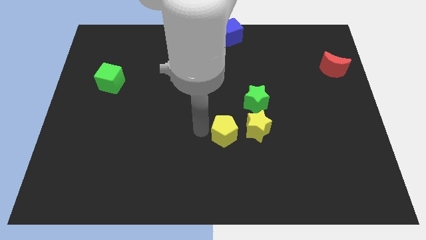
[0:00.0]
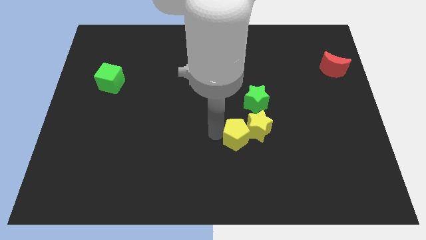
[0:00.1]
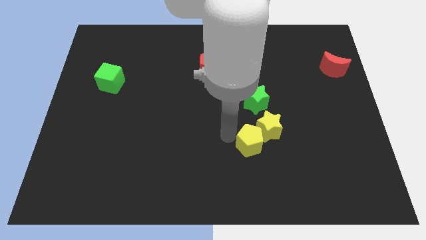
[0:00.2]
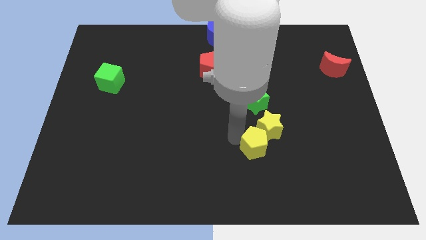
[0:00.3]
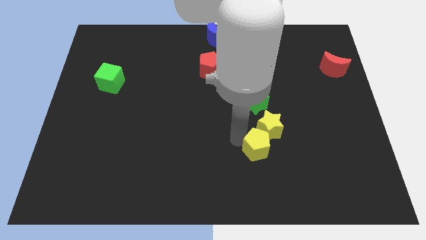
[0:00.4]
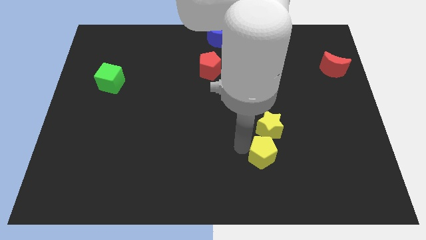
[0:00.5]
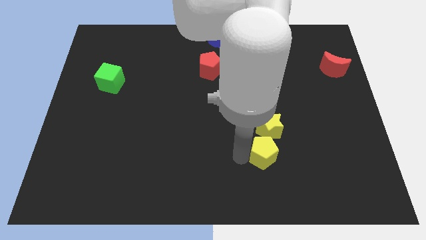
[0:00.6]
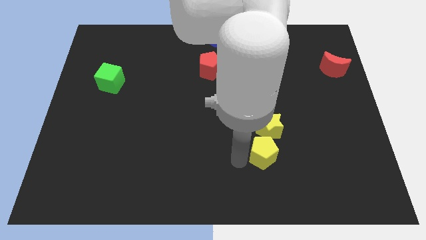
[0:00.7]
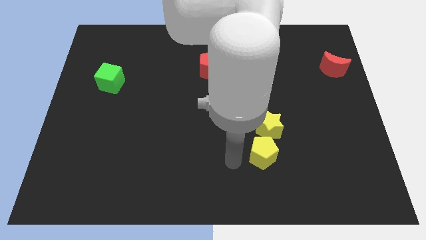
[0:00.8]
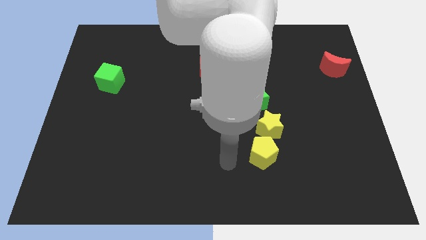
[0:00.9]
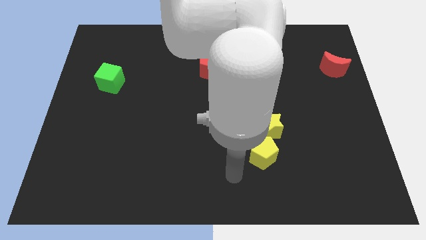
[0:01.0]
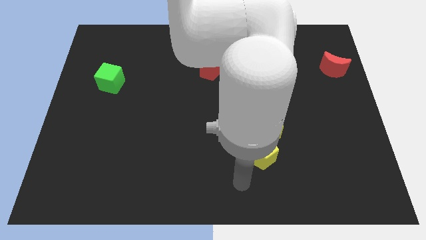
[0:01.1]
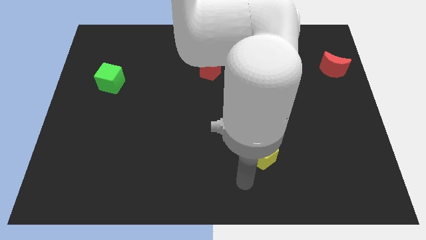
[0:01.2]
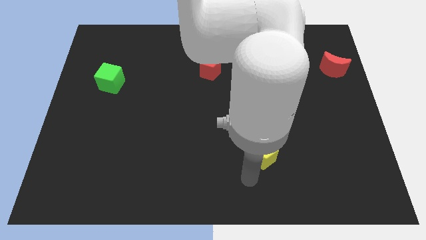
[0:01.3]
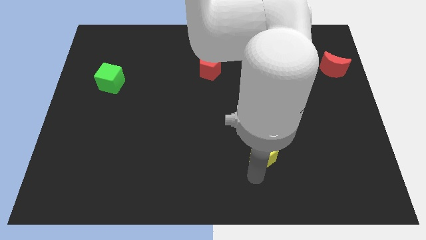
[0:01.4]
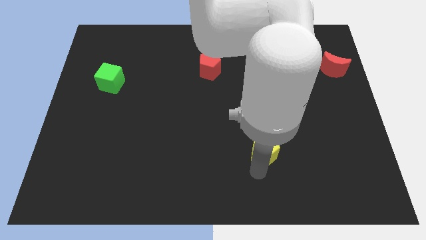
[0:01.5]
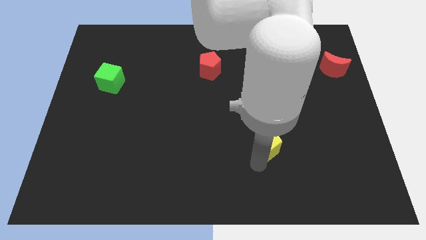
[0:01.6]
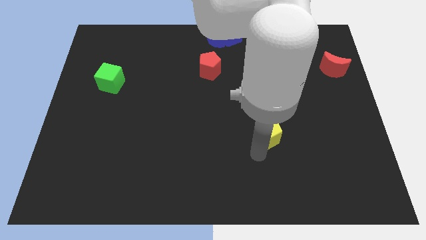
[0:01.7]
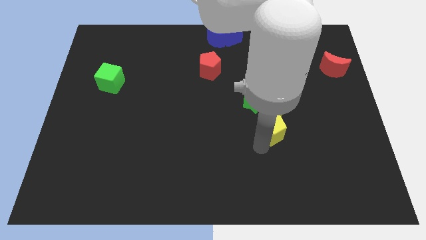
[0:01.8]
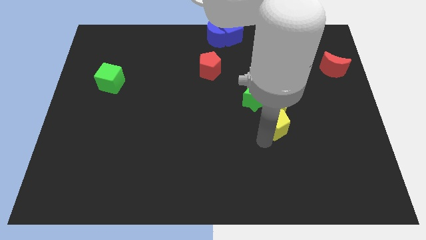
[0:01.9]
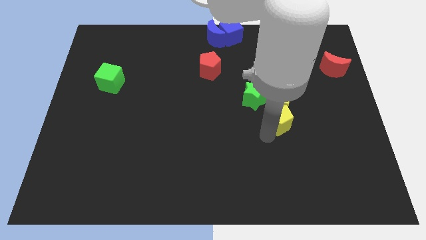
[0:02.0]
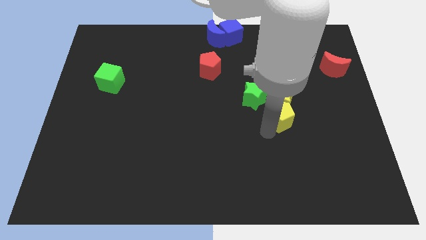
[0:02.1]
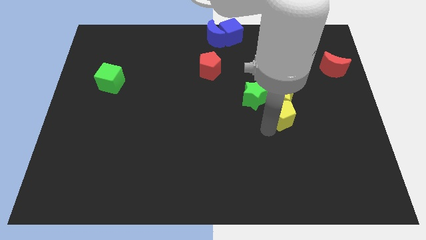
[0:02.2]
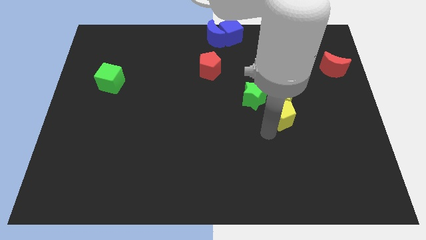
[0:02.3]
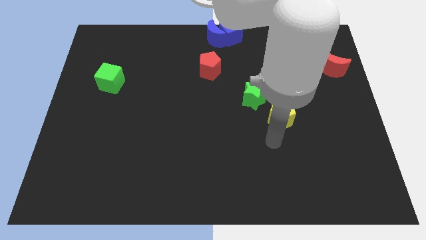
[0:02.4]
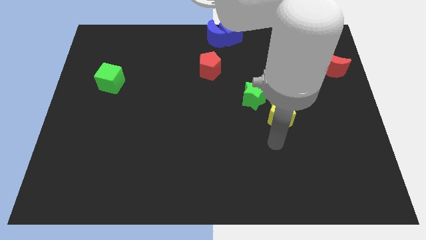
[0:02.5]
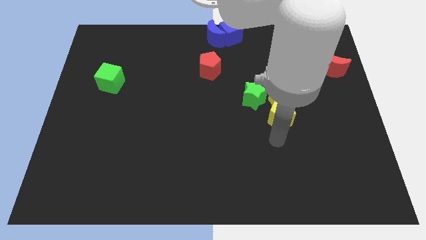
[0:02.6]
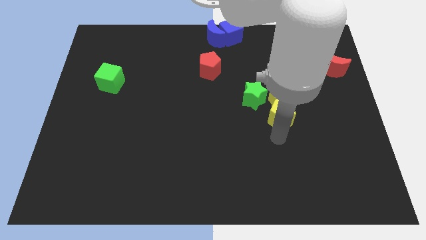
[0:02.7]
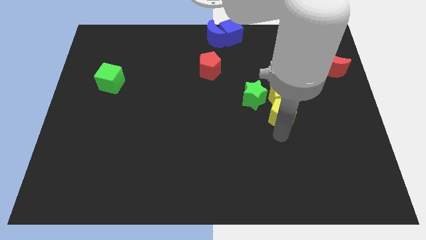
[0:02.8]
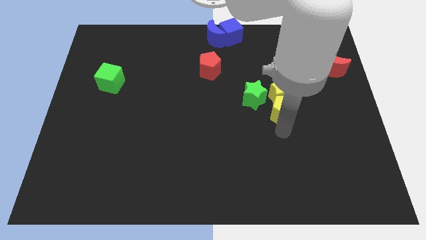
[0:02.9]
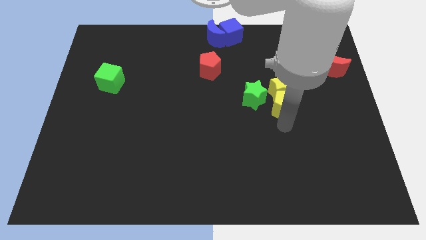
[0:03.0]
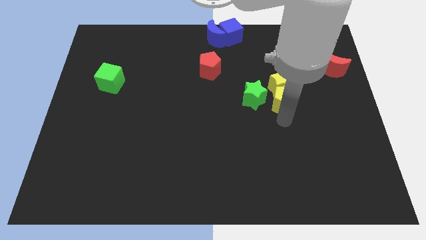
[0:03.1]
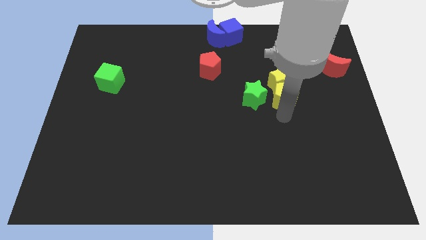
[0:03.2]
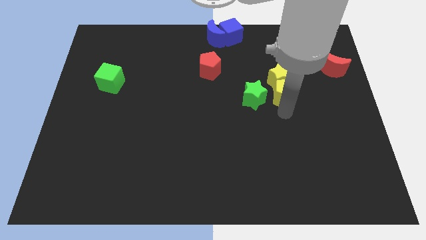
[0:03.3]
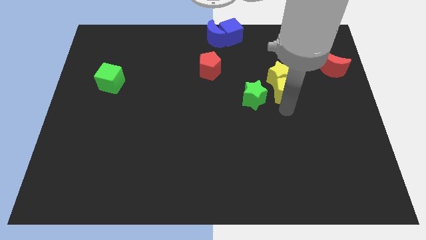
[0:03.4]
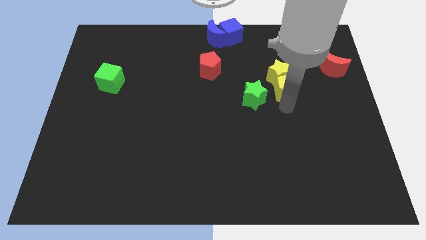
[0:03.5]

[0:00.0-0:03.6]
move the yellow blocks to the right side of the green star

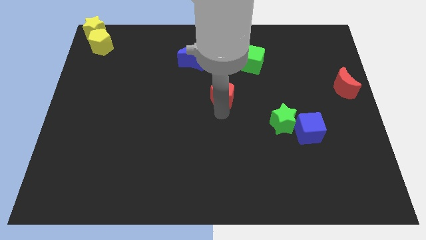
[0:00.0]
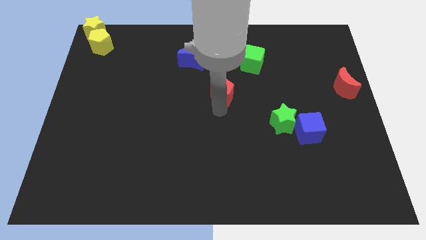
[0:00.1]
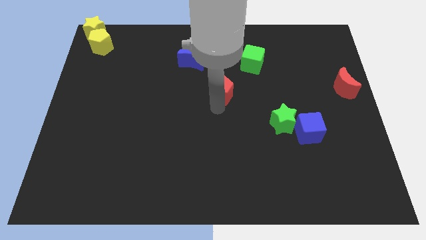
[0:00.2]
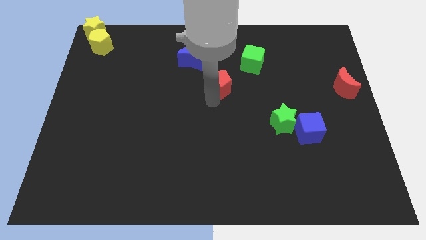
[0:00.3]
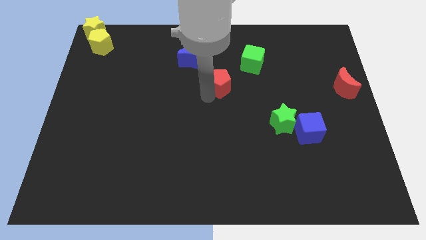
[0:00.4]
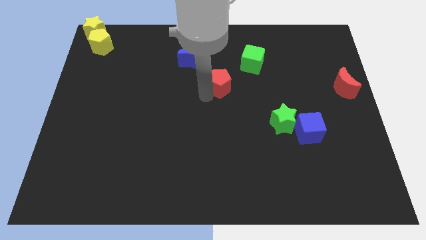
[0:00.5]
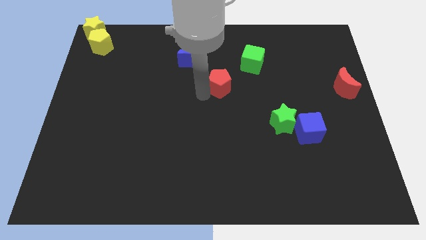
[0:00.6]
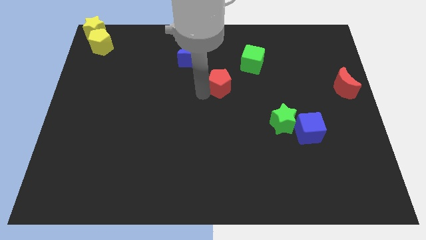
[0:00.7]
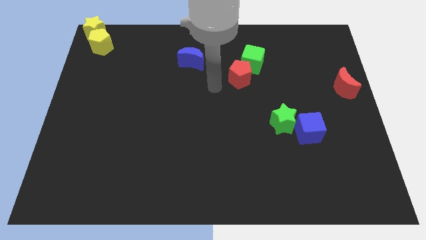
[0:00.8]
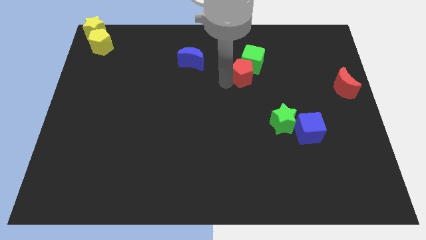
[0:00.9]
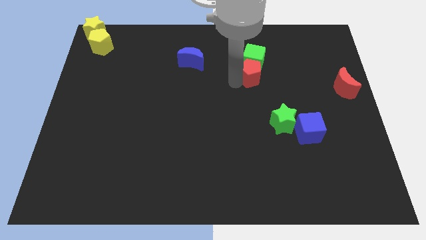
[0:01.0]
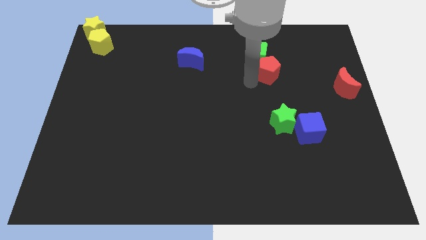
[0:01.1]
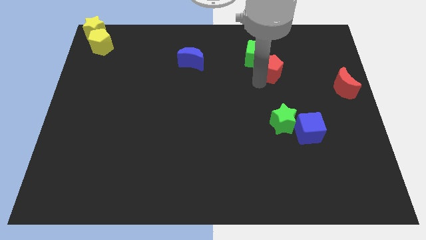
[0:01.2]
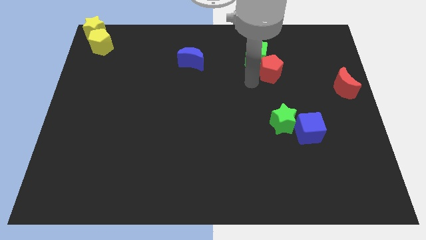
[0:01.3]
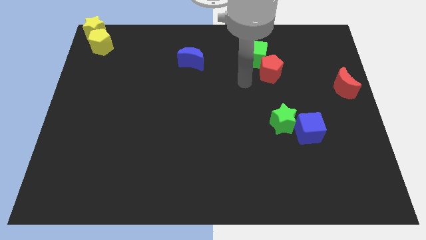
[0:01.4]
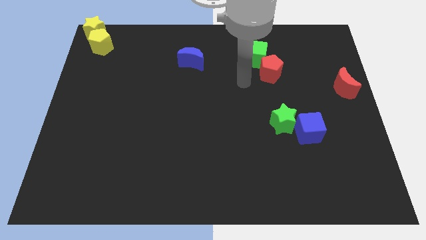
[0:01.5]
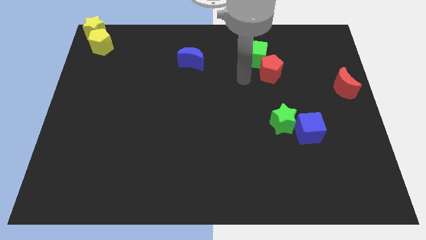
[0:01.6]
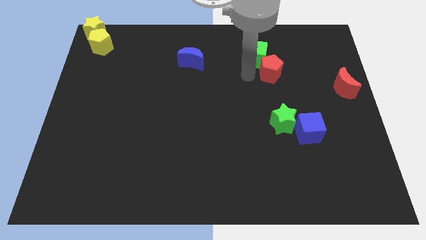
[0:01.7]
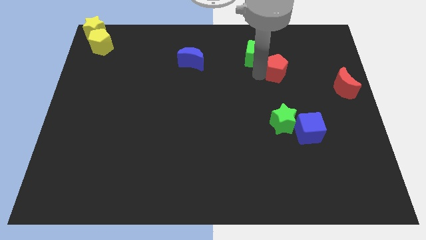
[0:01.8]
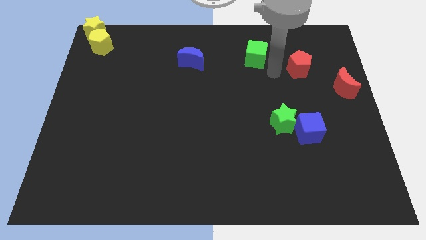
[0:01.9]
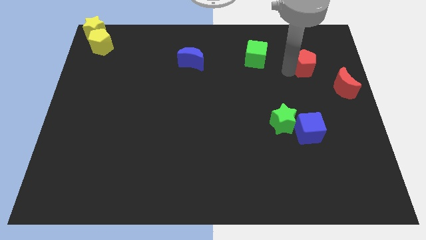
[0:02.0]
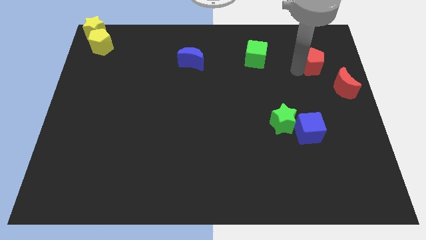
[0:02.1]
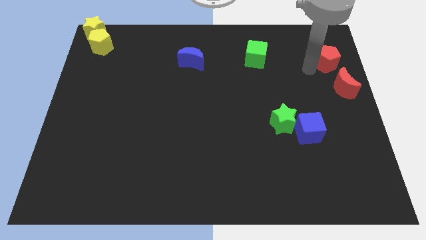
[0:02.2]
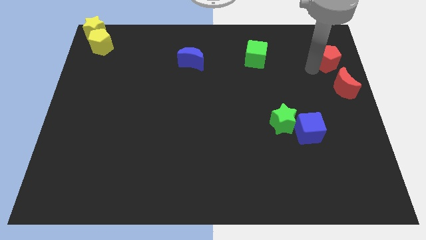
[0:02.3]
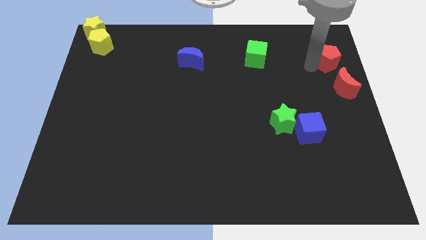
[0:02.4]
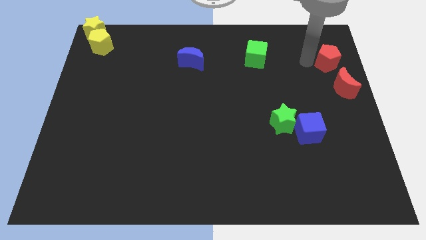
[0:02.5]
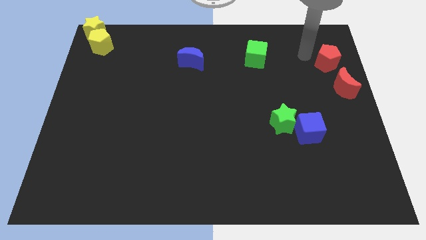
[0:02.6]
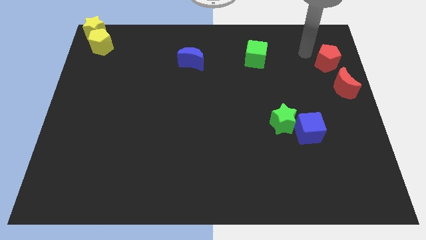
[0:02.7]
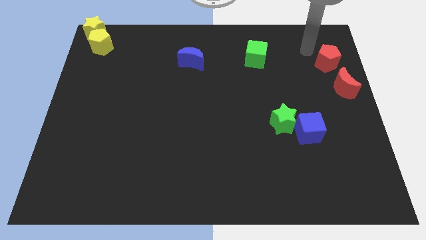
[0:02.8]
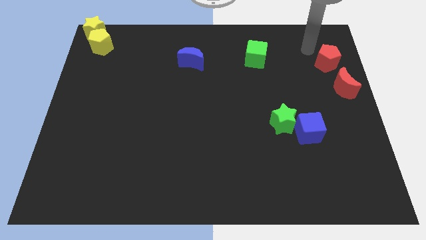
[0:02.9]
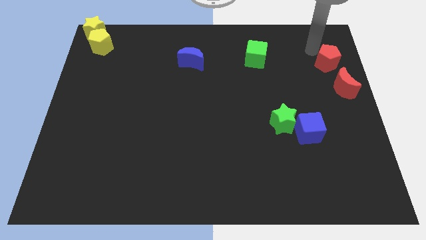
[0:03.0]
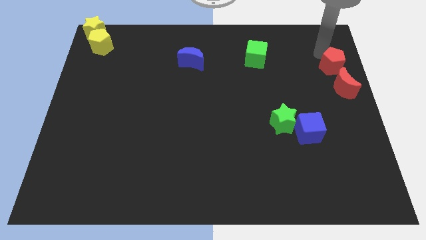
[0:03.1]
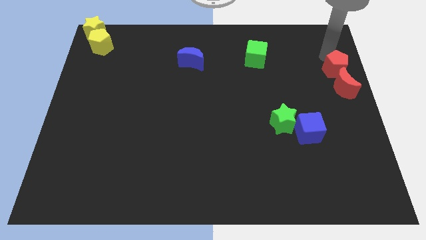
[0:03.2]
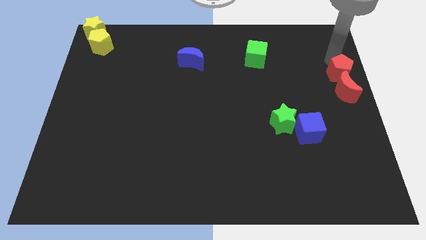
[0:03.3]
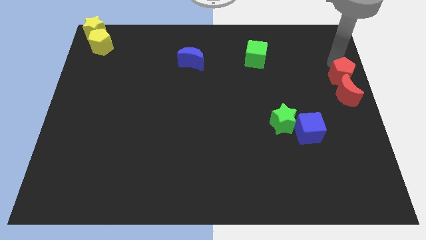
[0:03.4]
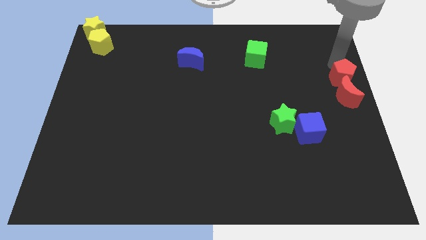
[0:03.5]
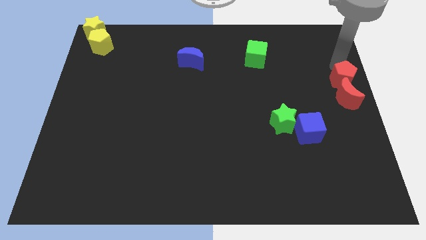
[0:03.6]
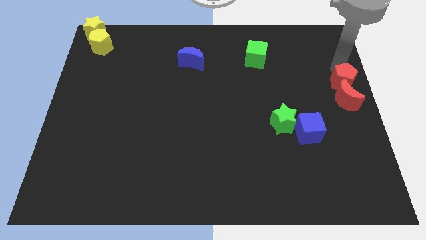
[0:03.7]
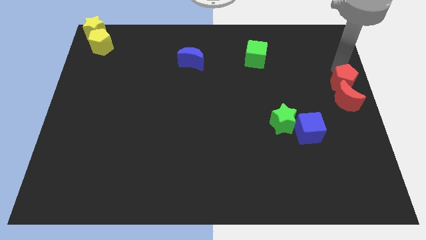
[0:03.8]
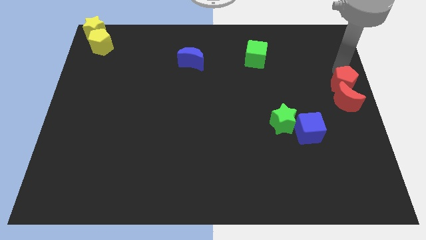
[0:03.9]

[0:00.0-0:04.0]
push the red pentagon into the red moon

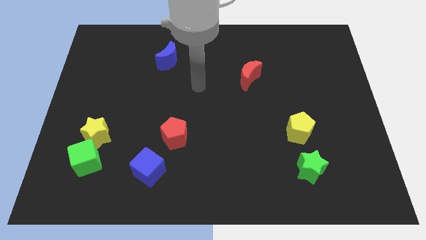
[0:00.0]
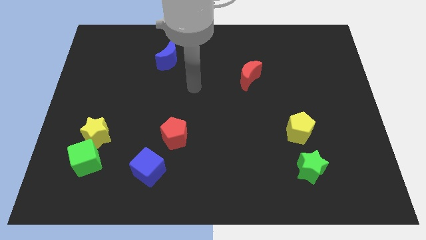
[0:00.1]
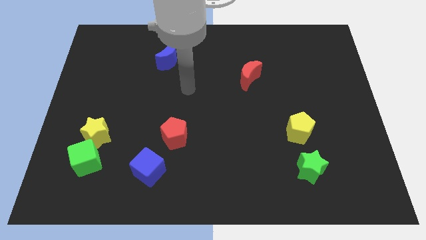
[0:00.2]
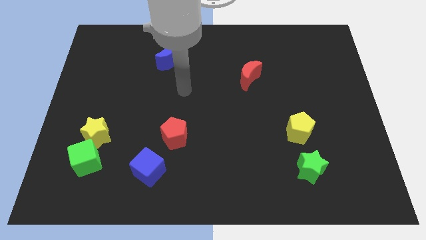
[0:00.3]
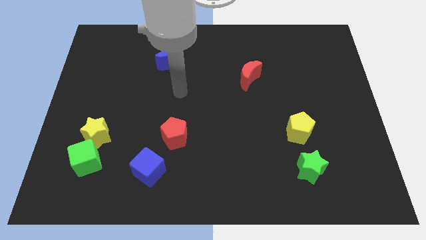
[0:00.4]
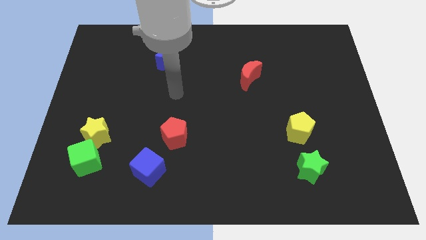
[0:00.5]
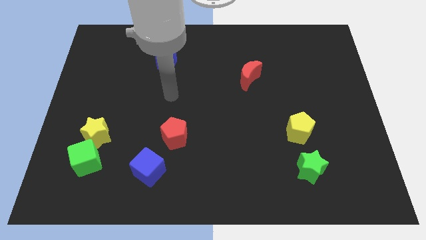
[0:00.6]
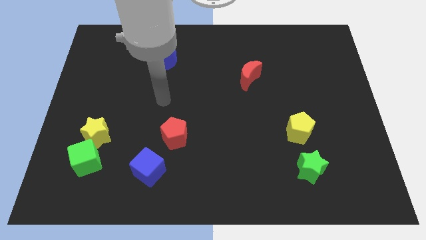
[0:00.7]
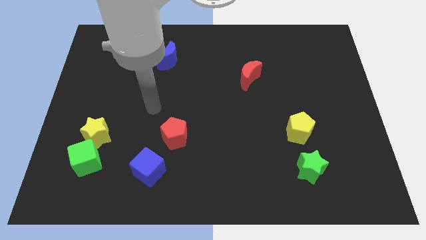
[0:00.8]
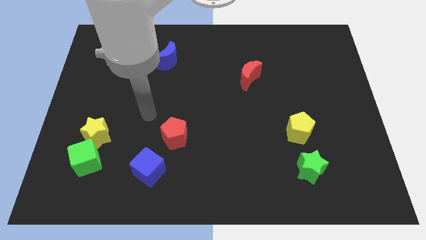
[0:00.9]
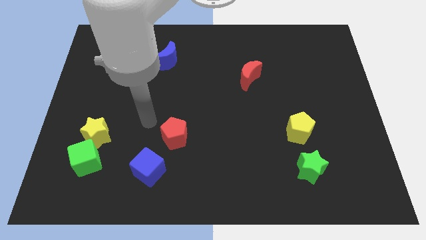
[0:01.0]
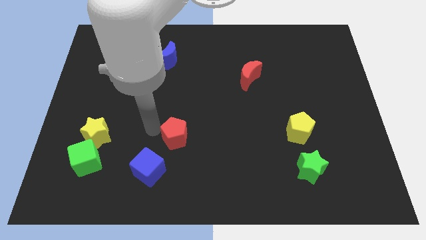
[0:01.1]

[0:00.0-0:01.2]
point your arm at the top left side of the red pentagon

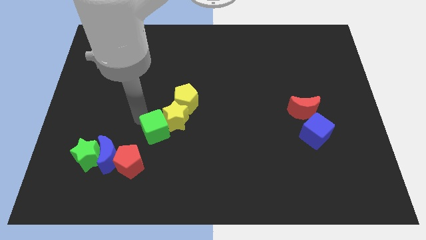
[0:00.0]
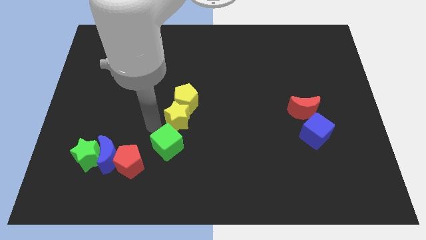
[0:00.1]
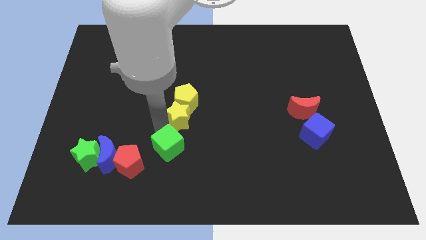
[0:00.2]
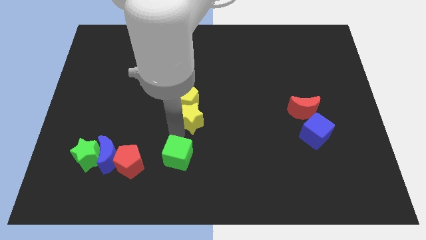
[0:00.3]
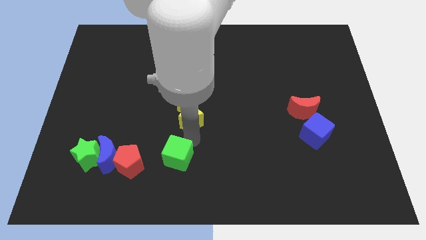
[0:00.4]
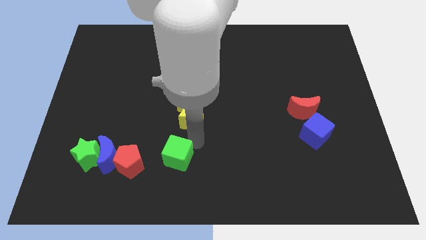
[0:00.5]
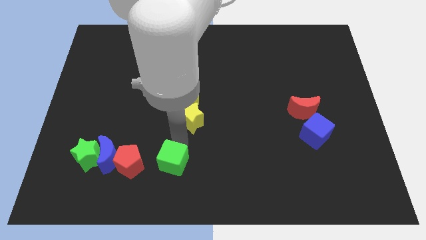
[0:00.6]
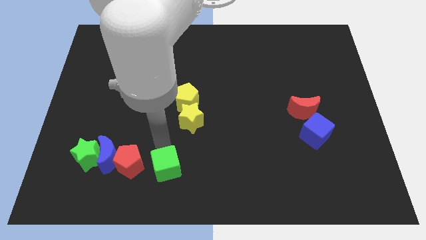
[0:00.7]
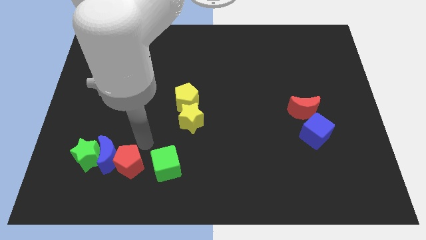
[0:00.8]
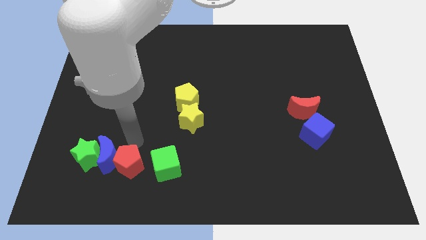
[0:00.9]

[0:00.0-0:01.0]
separate the green cube and yellow star
